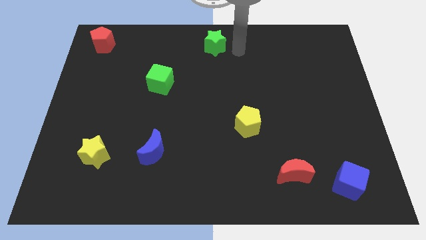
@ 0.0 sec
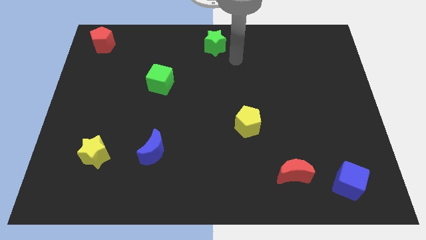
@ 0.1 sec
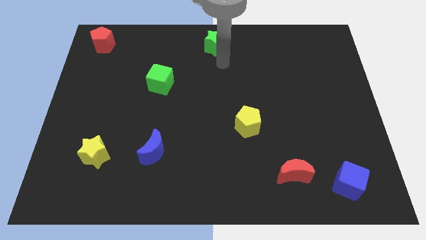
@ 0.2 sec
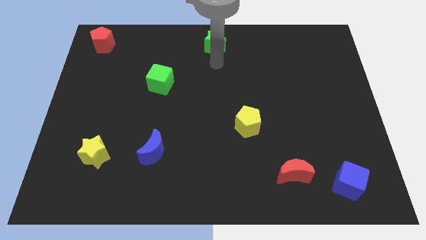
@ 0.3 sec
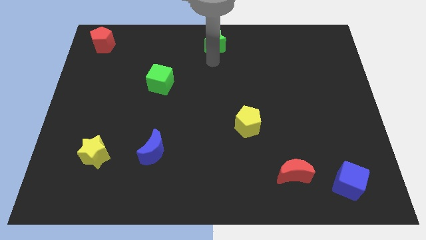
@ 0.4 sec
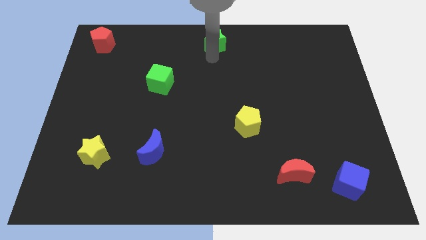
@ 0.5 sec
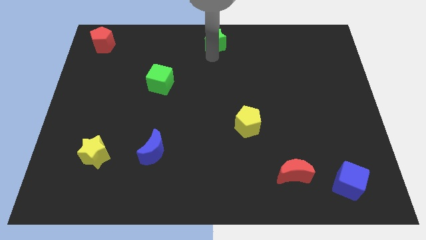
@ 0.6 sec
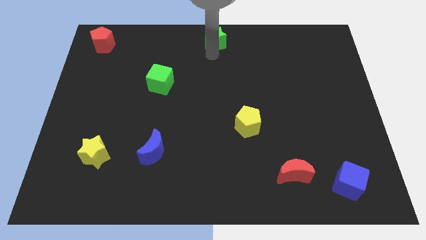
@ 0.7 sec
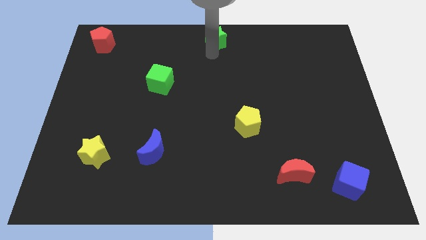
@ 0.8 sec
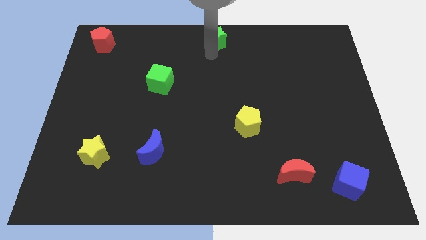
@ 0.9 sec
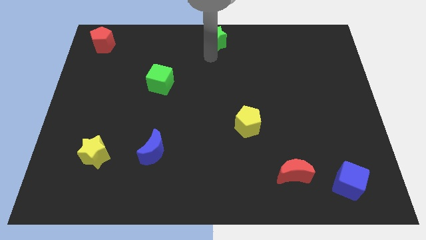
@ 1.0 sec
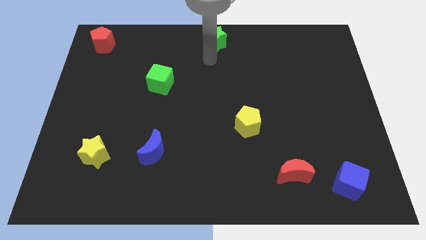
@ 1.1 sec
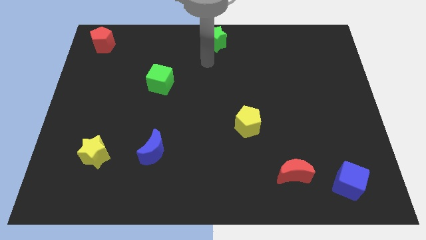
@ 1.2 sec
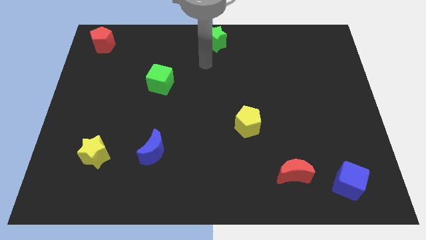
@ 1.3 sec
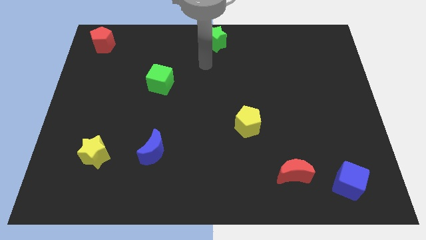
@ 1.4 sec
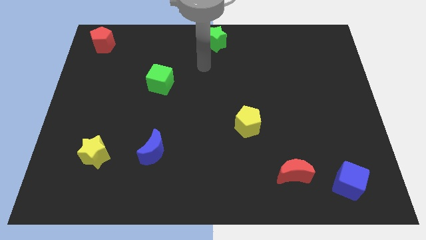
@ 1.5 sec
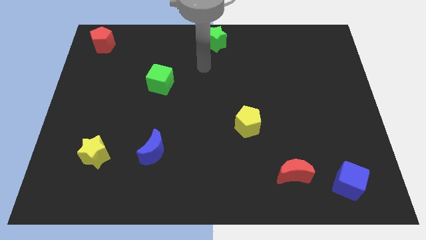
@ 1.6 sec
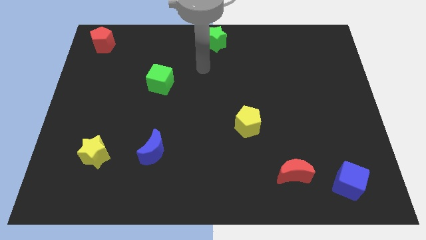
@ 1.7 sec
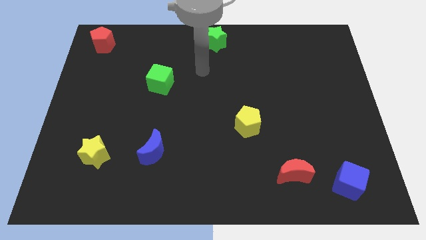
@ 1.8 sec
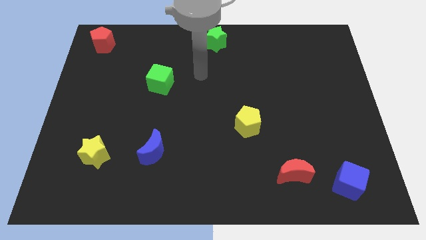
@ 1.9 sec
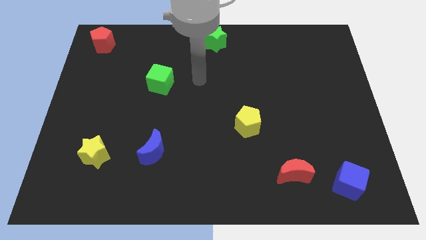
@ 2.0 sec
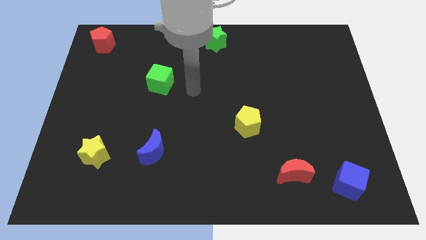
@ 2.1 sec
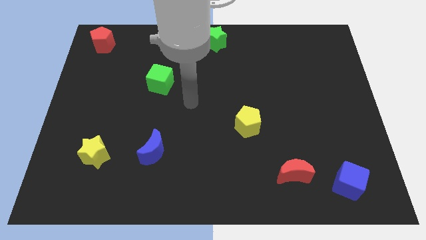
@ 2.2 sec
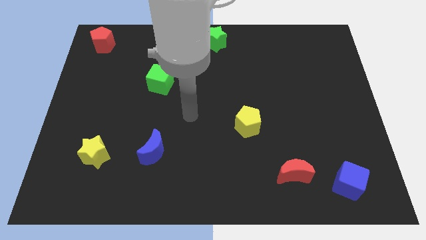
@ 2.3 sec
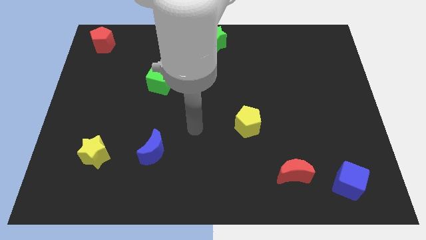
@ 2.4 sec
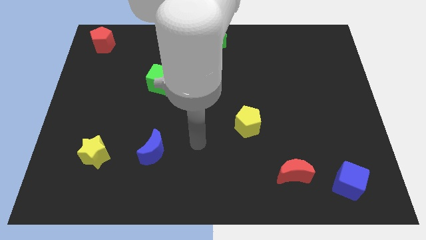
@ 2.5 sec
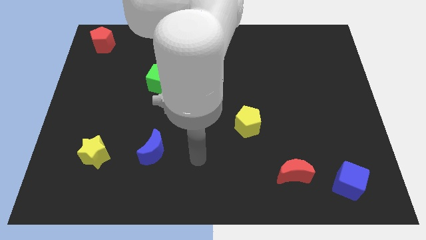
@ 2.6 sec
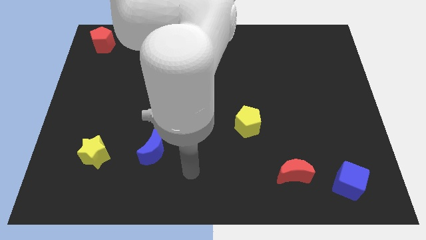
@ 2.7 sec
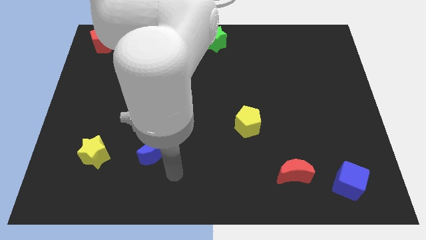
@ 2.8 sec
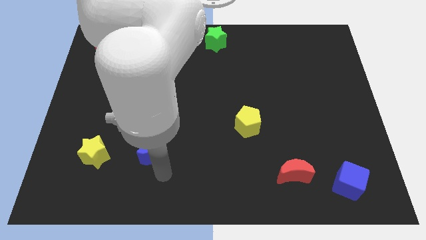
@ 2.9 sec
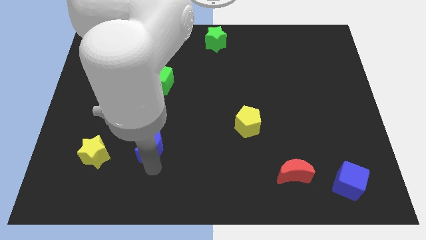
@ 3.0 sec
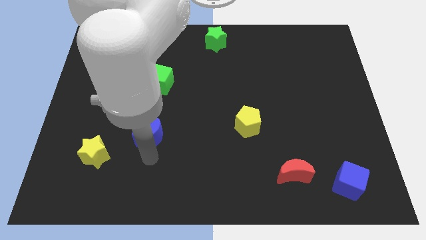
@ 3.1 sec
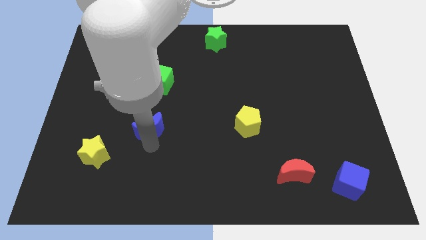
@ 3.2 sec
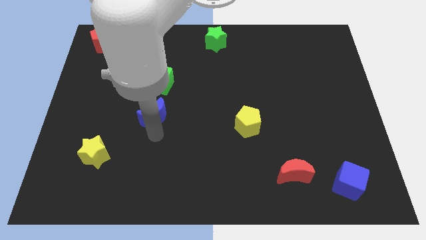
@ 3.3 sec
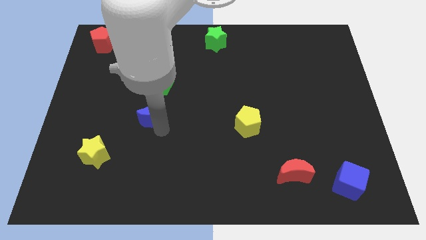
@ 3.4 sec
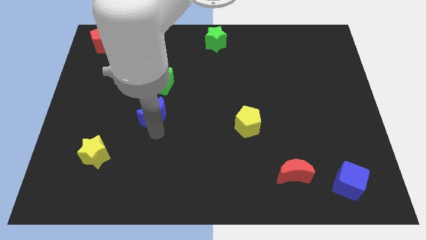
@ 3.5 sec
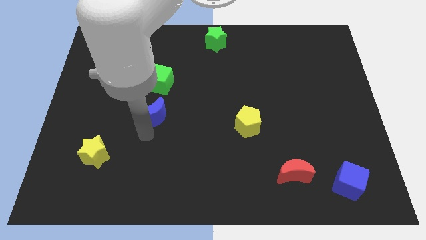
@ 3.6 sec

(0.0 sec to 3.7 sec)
go near blue moon

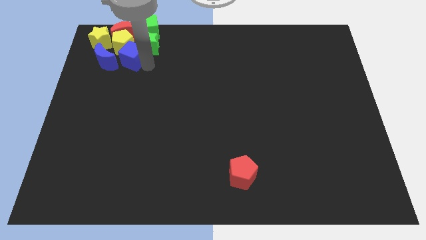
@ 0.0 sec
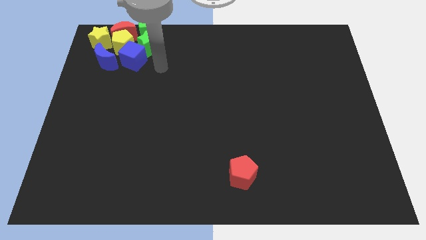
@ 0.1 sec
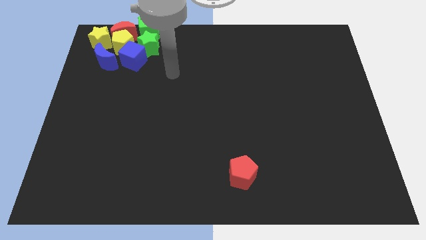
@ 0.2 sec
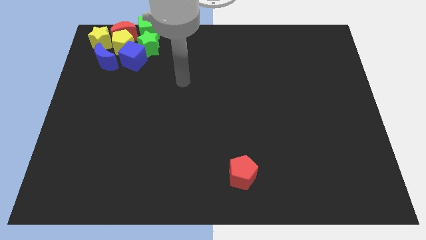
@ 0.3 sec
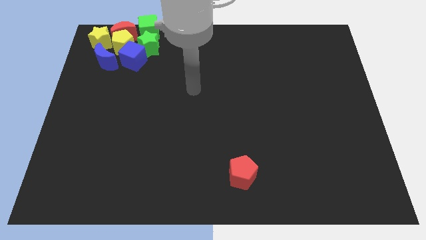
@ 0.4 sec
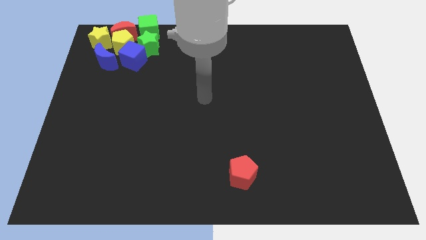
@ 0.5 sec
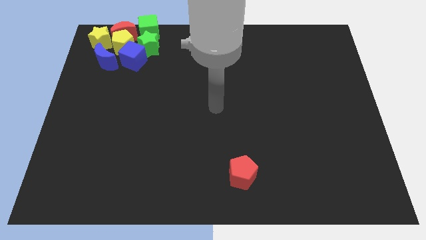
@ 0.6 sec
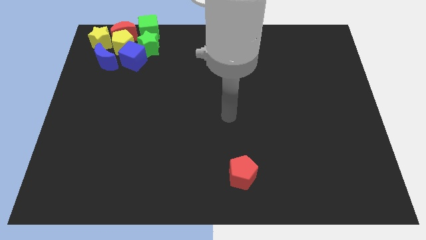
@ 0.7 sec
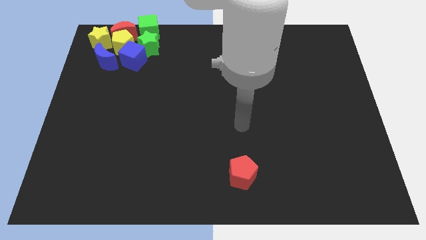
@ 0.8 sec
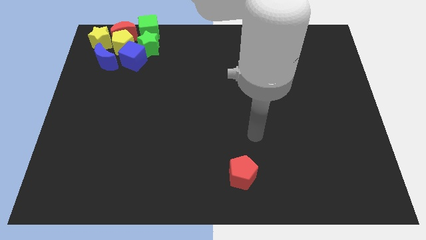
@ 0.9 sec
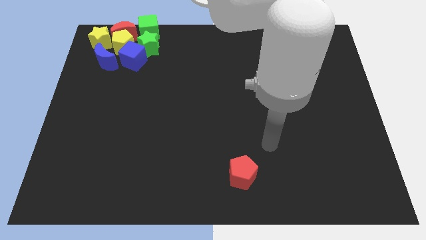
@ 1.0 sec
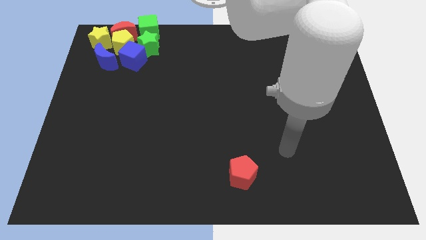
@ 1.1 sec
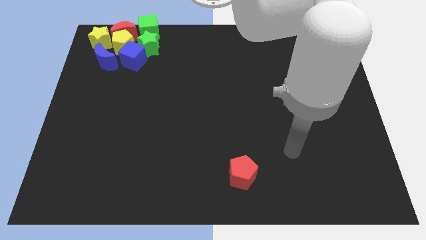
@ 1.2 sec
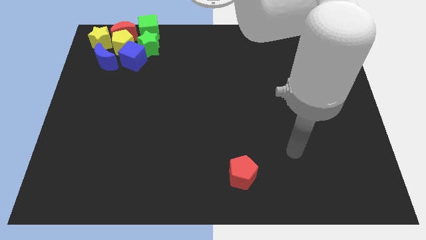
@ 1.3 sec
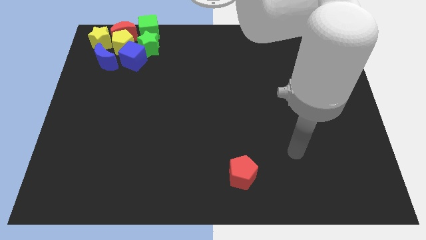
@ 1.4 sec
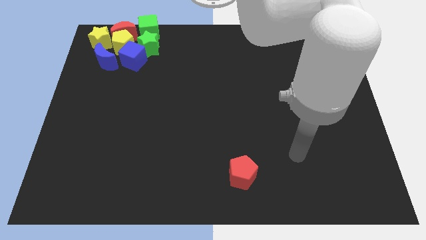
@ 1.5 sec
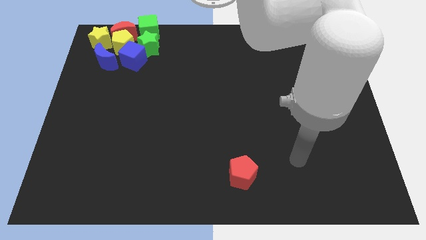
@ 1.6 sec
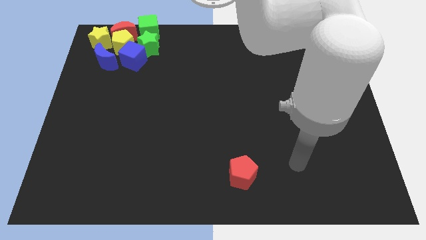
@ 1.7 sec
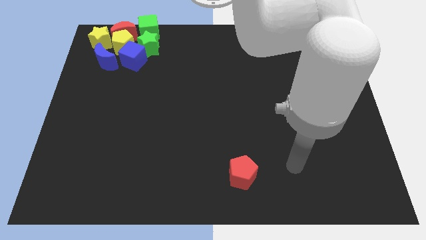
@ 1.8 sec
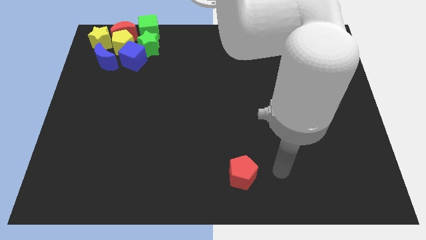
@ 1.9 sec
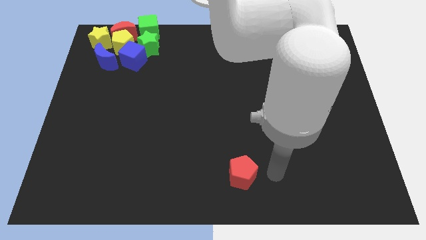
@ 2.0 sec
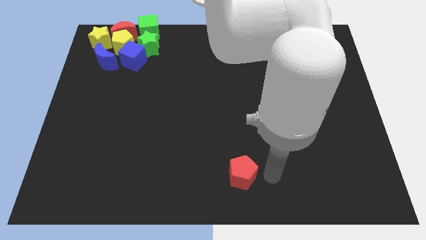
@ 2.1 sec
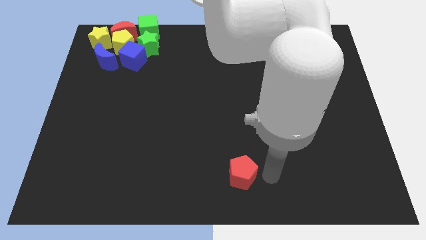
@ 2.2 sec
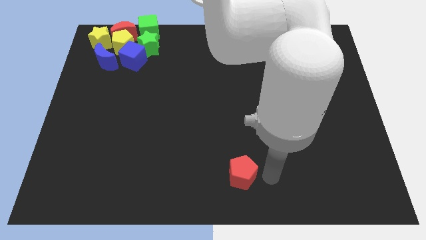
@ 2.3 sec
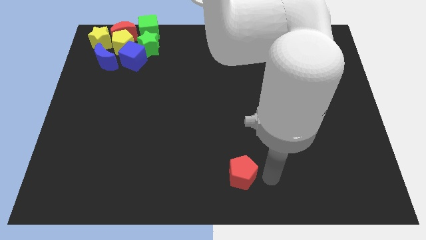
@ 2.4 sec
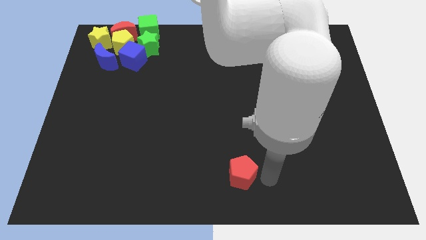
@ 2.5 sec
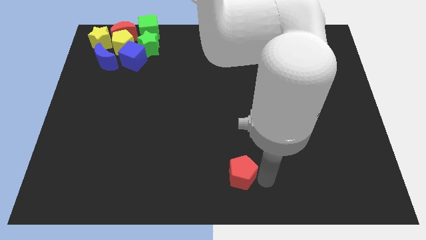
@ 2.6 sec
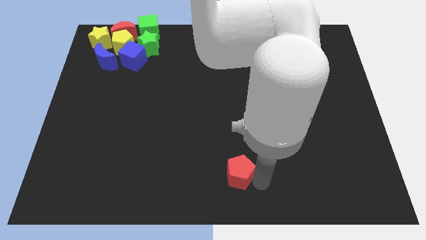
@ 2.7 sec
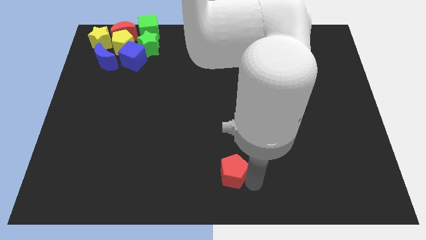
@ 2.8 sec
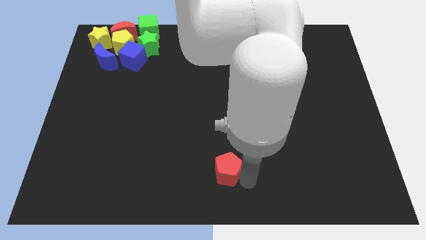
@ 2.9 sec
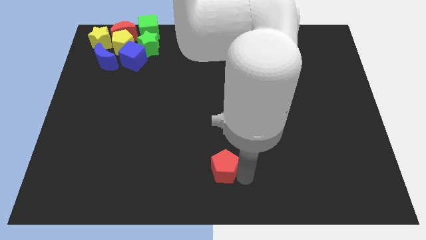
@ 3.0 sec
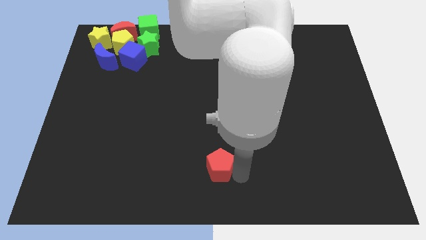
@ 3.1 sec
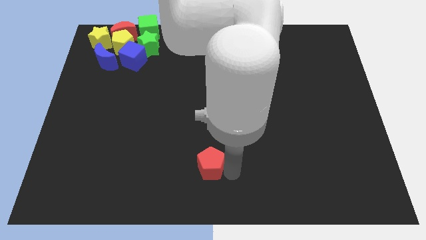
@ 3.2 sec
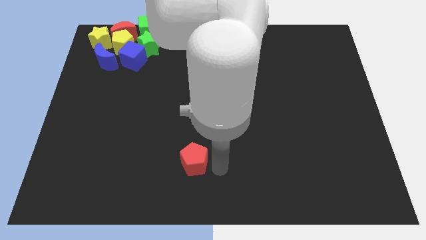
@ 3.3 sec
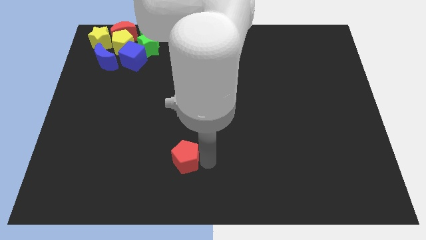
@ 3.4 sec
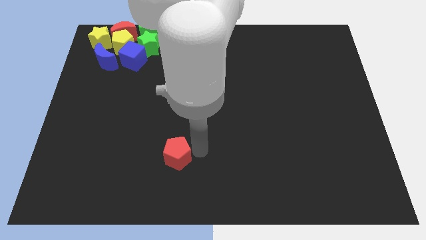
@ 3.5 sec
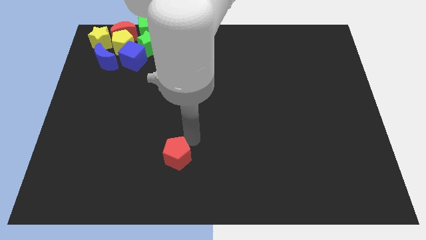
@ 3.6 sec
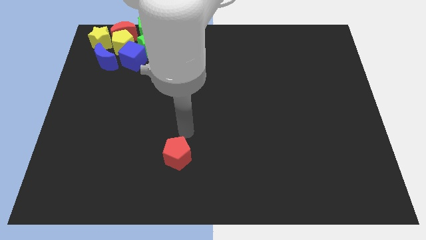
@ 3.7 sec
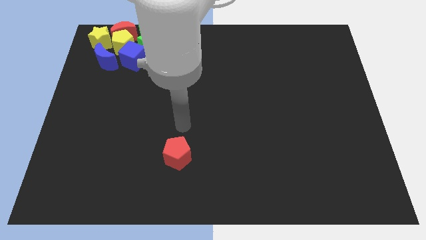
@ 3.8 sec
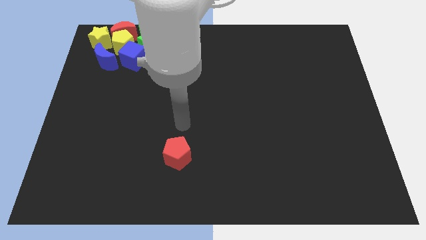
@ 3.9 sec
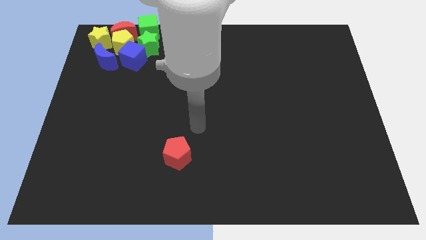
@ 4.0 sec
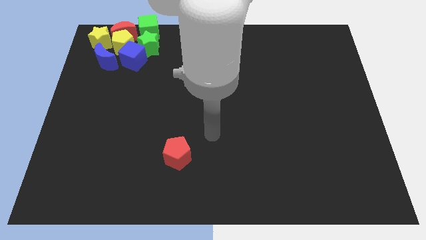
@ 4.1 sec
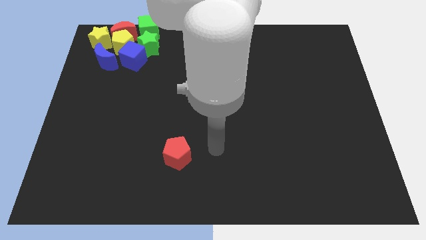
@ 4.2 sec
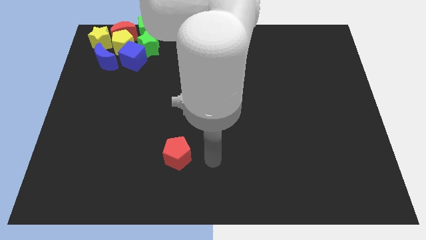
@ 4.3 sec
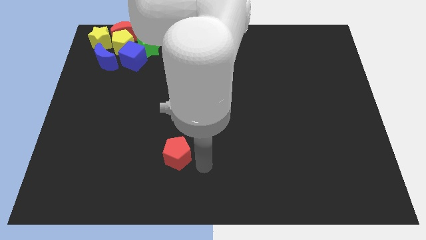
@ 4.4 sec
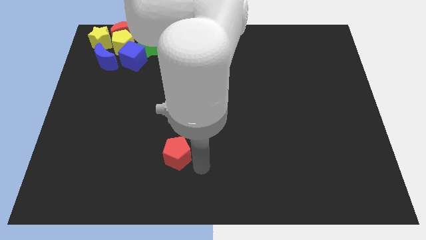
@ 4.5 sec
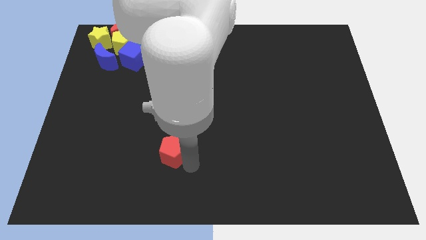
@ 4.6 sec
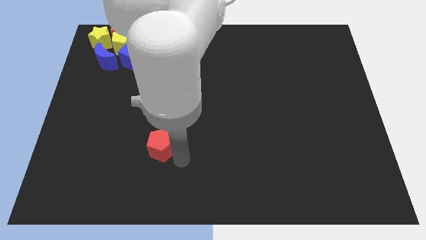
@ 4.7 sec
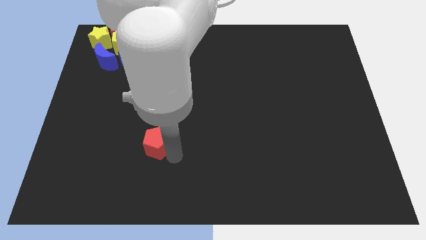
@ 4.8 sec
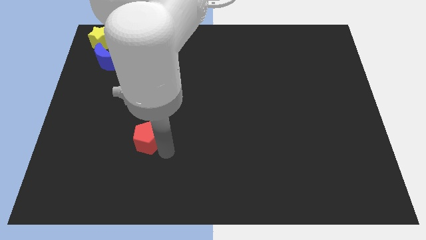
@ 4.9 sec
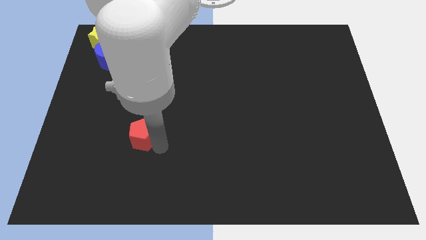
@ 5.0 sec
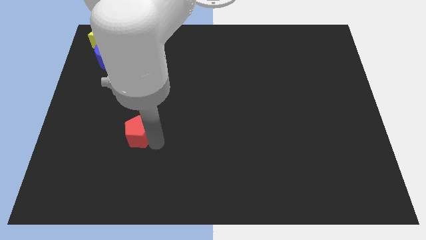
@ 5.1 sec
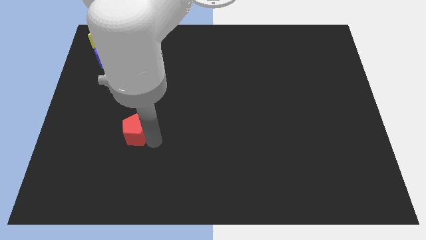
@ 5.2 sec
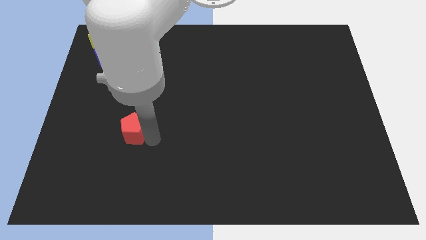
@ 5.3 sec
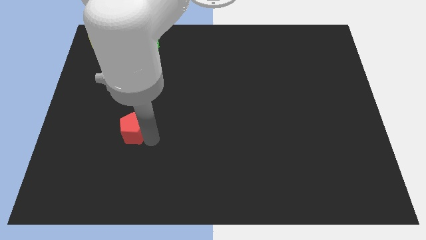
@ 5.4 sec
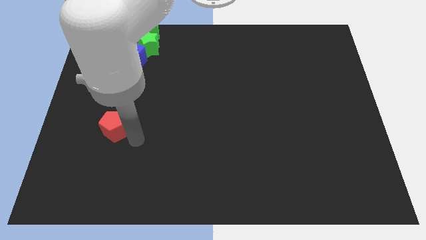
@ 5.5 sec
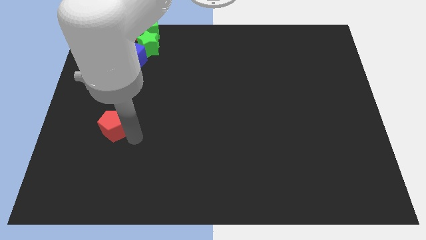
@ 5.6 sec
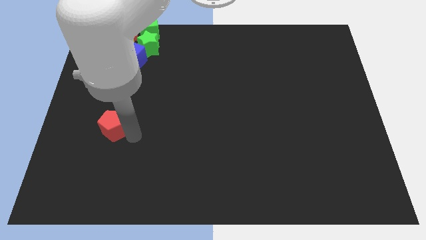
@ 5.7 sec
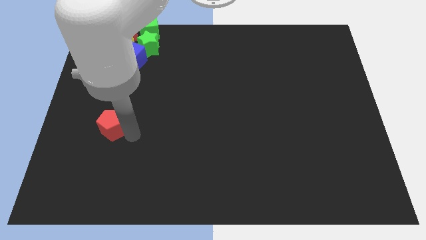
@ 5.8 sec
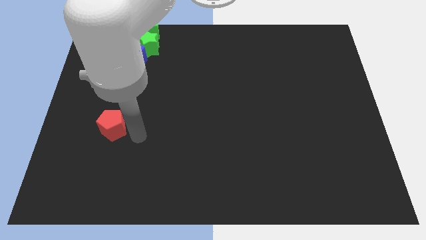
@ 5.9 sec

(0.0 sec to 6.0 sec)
bring the red pentagon underneath the group of blocks
